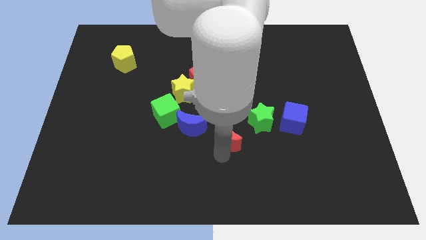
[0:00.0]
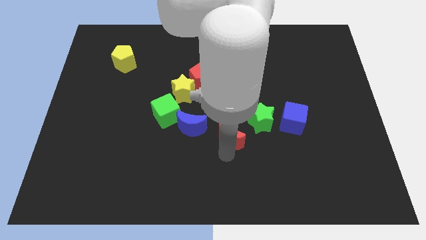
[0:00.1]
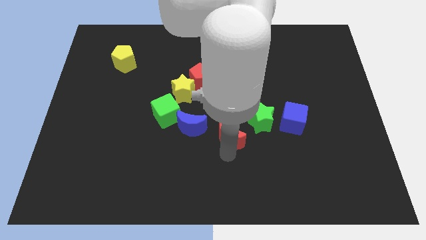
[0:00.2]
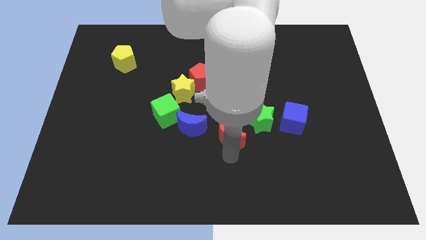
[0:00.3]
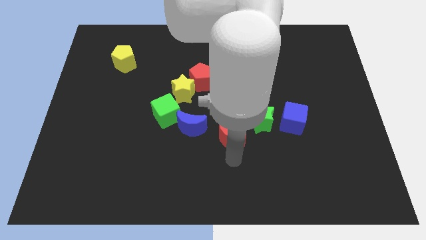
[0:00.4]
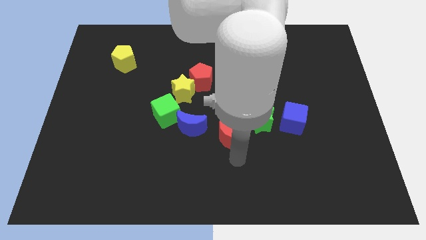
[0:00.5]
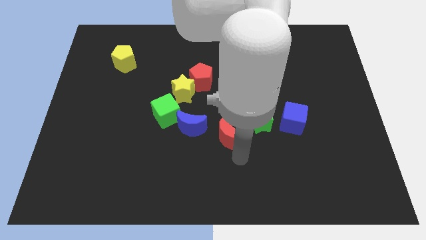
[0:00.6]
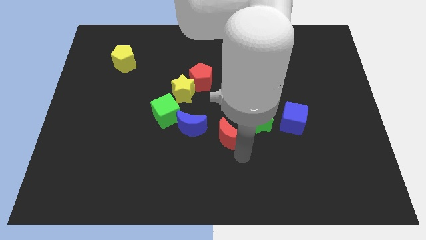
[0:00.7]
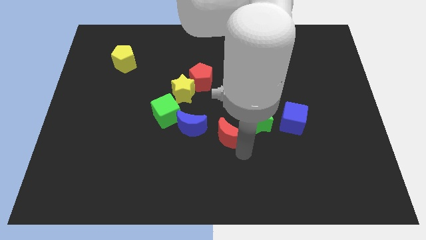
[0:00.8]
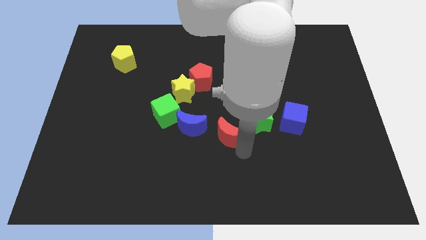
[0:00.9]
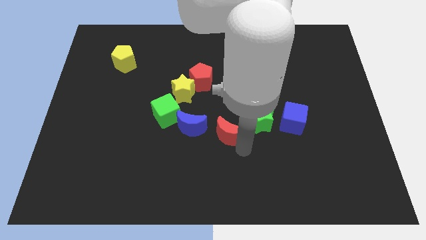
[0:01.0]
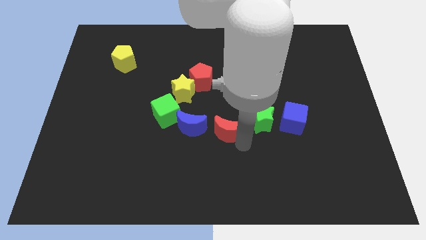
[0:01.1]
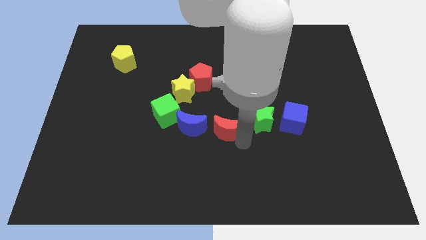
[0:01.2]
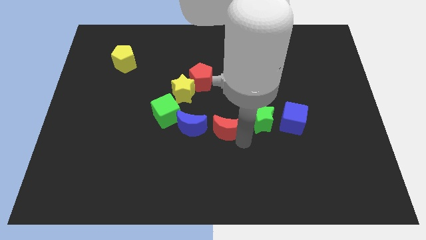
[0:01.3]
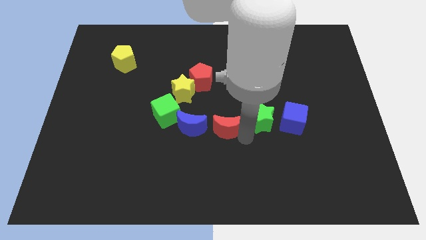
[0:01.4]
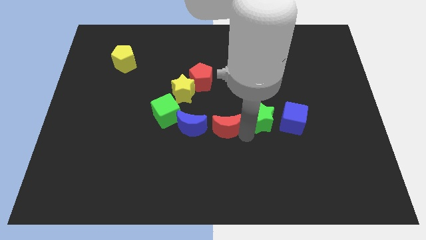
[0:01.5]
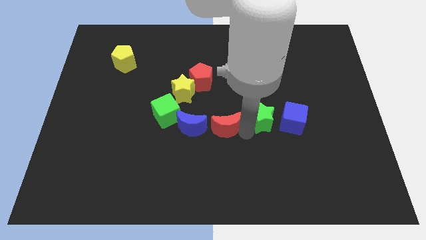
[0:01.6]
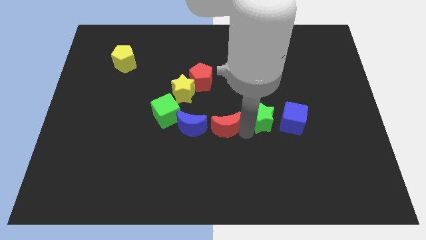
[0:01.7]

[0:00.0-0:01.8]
place red crescent beside blue crescent

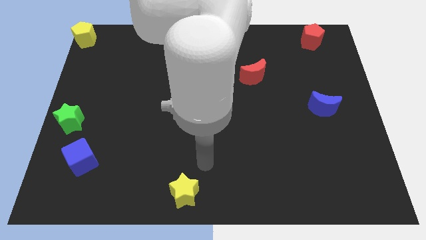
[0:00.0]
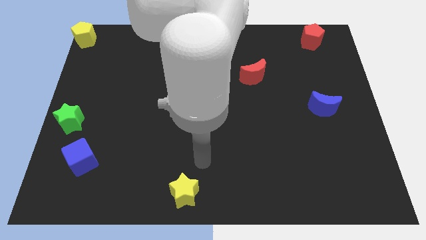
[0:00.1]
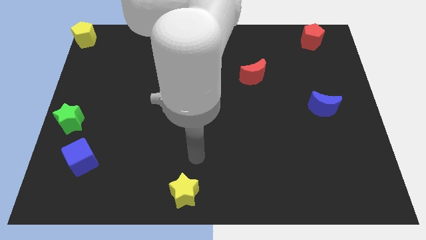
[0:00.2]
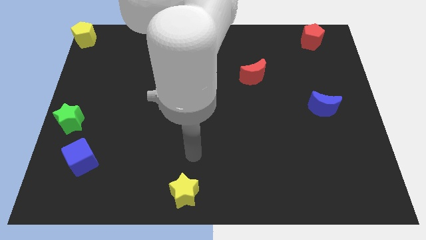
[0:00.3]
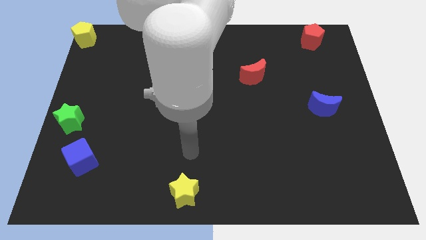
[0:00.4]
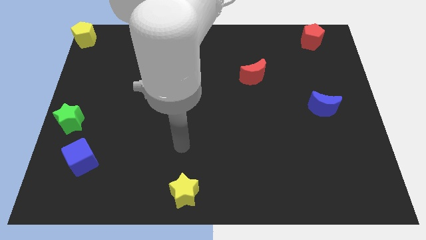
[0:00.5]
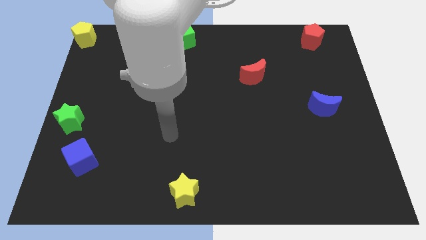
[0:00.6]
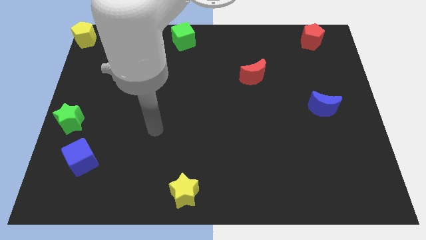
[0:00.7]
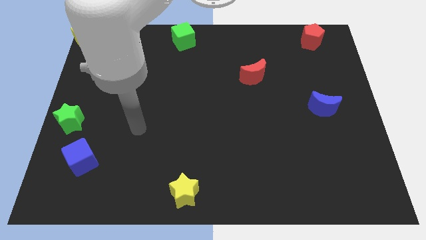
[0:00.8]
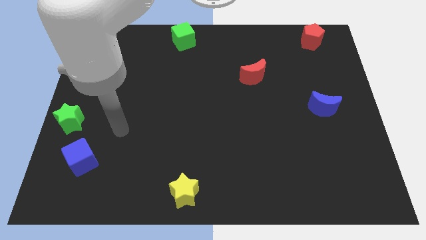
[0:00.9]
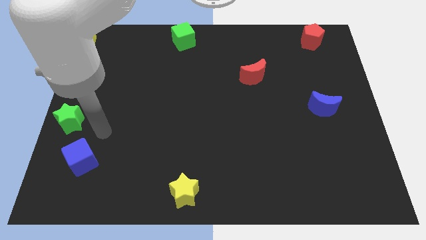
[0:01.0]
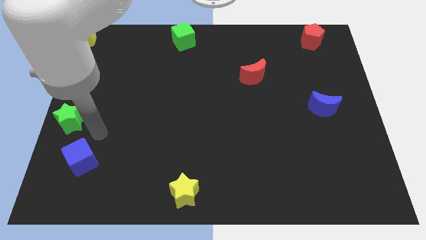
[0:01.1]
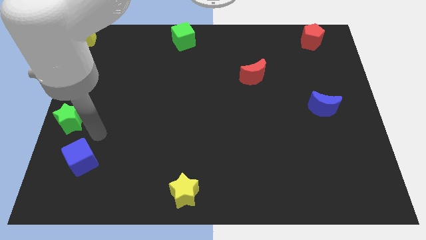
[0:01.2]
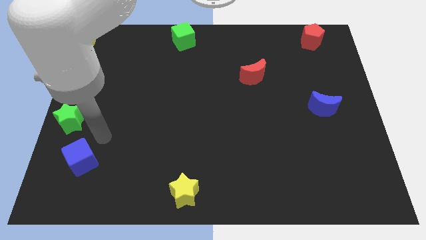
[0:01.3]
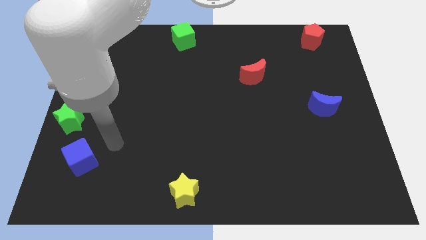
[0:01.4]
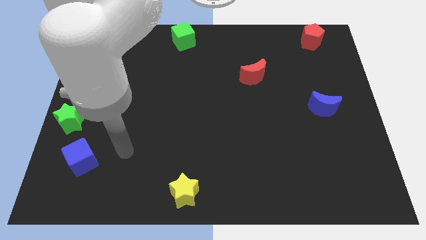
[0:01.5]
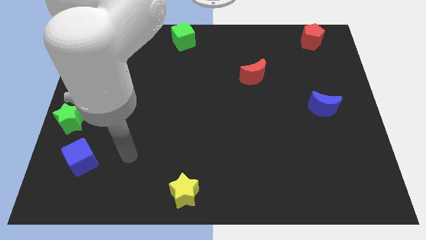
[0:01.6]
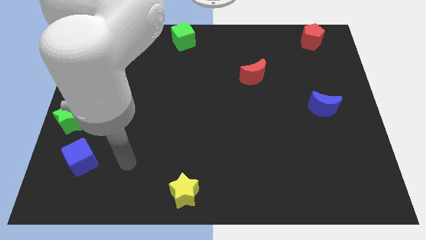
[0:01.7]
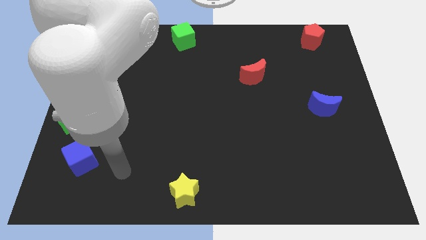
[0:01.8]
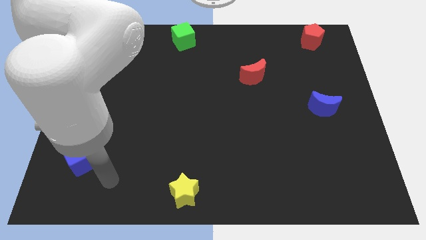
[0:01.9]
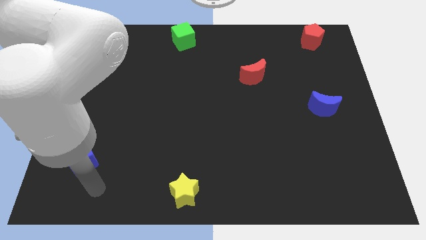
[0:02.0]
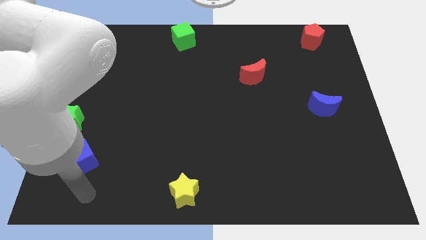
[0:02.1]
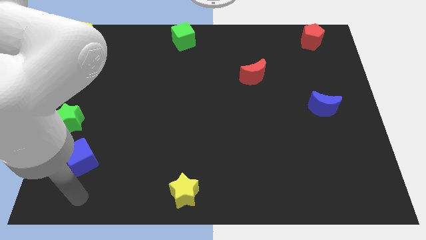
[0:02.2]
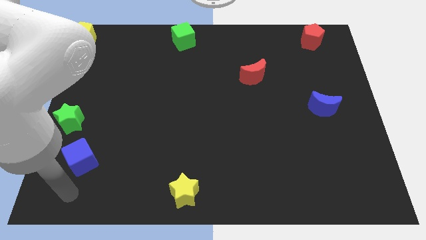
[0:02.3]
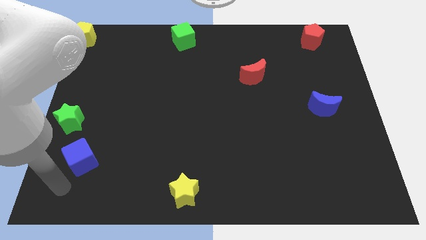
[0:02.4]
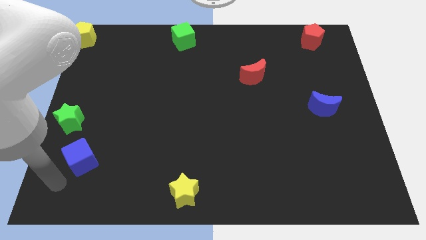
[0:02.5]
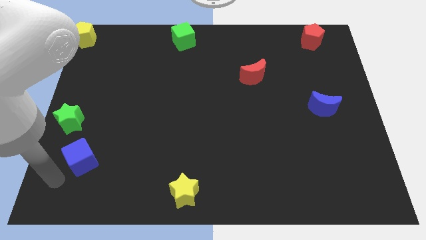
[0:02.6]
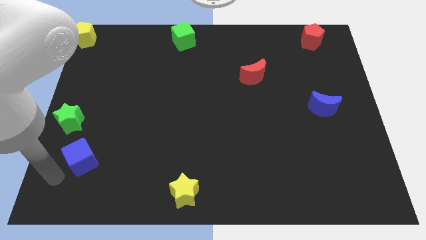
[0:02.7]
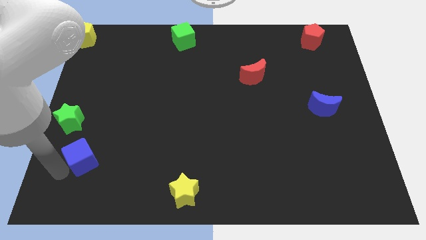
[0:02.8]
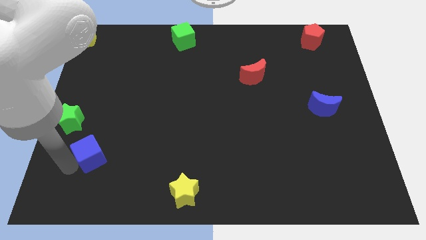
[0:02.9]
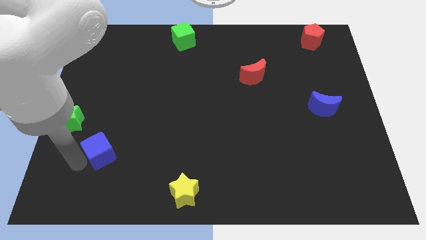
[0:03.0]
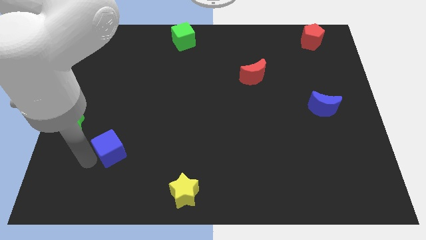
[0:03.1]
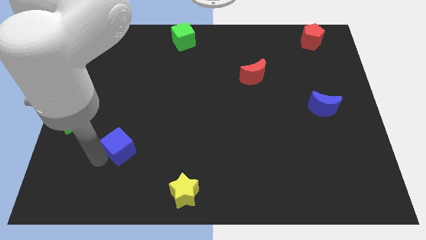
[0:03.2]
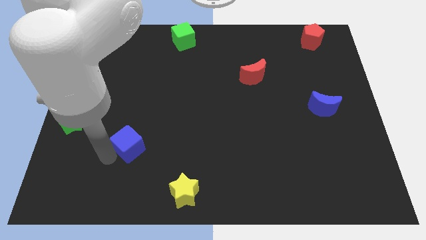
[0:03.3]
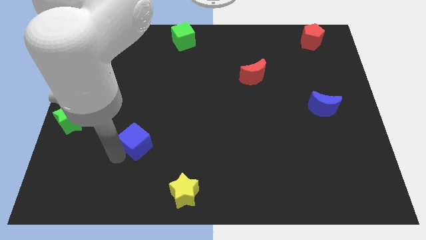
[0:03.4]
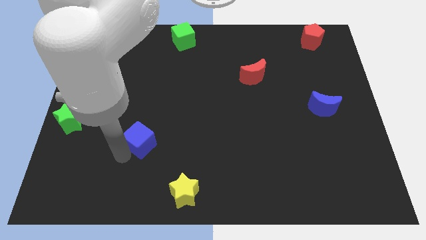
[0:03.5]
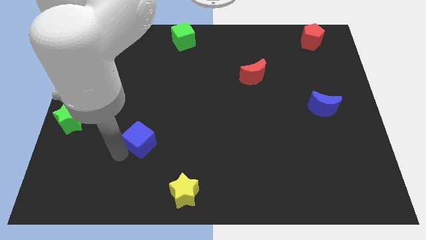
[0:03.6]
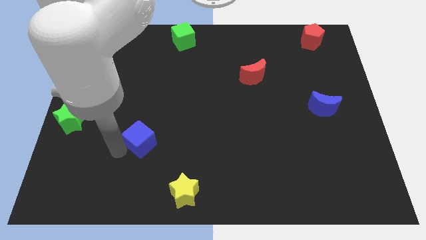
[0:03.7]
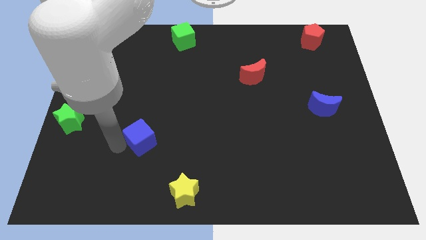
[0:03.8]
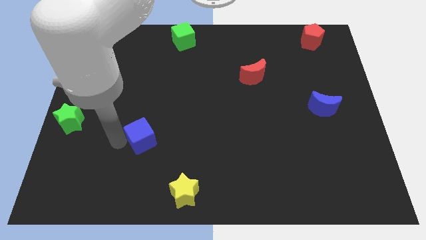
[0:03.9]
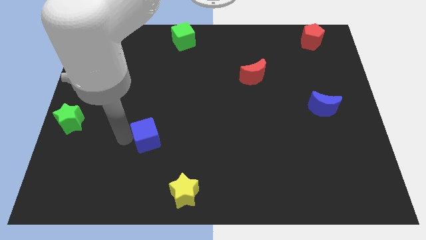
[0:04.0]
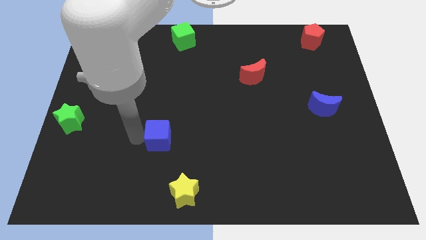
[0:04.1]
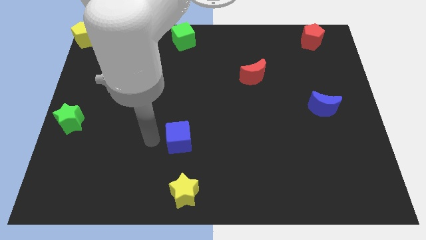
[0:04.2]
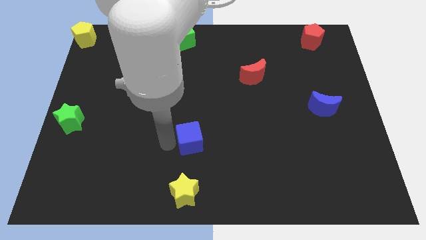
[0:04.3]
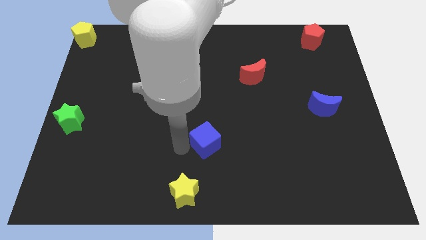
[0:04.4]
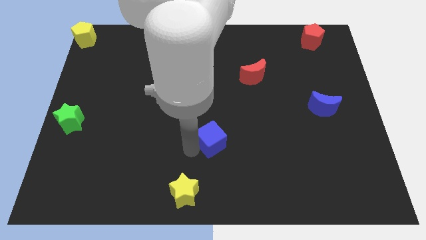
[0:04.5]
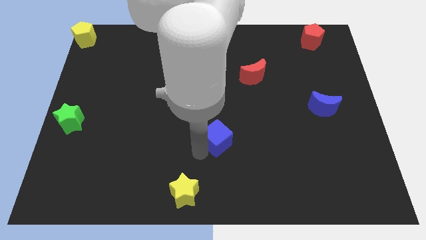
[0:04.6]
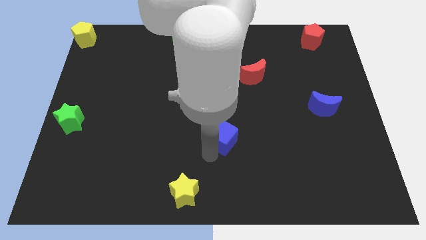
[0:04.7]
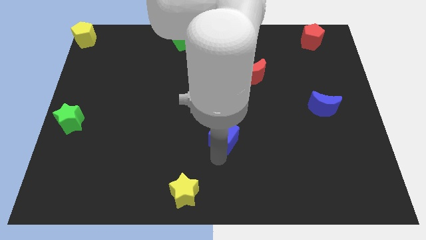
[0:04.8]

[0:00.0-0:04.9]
push the blue cube towards the center of the board

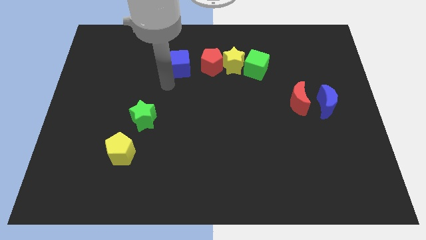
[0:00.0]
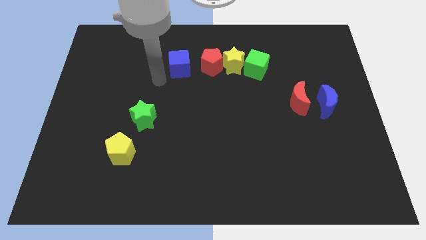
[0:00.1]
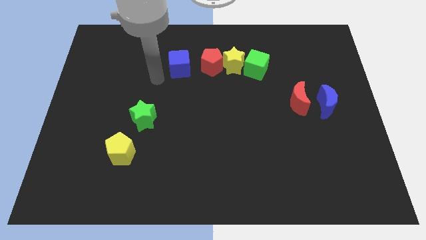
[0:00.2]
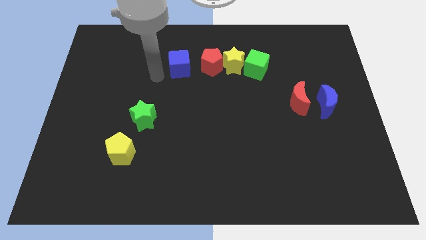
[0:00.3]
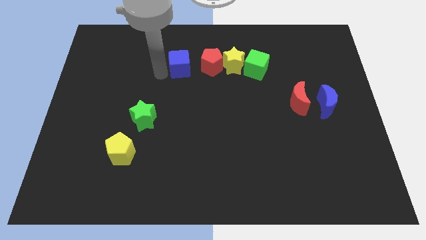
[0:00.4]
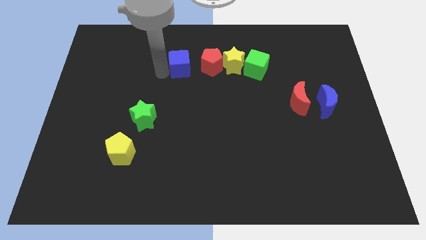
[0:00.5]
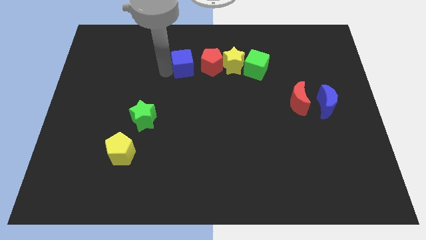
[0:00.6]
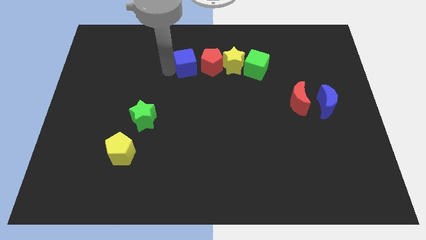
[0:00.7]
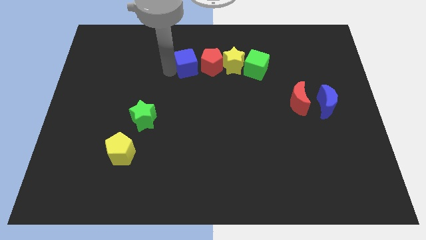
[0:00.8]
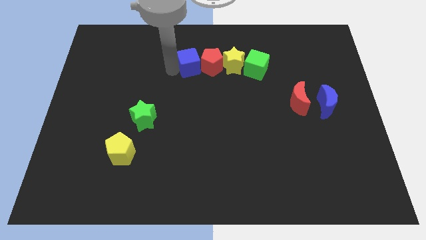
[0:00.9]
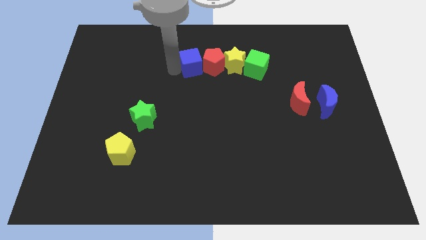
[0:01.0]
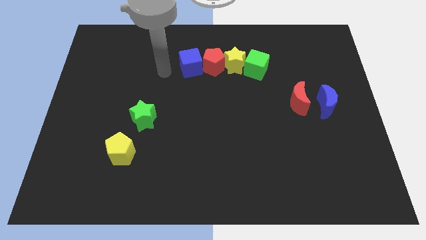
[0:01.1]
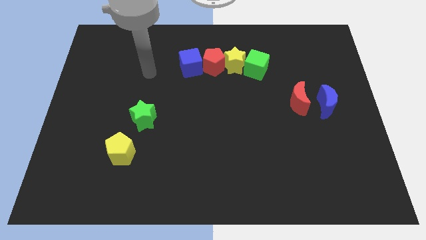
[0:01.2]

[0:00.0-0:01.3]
push blue cube to the left of the red pentagon

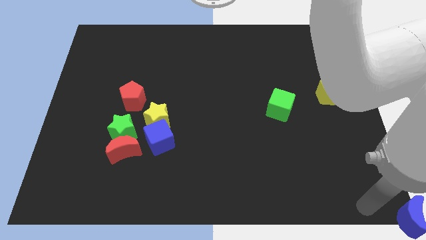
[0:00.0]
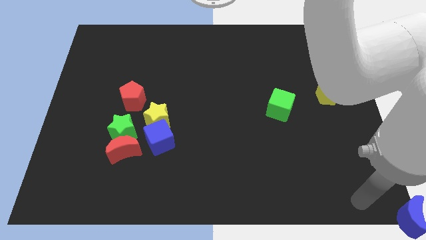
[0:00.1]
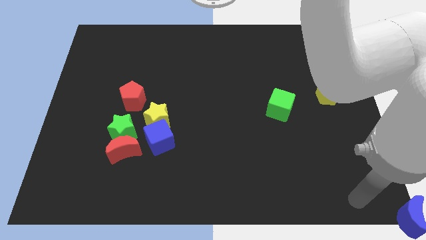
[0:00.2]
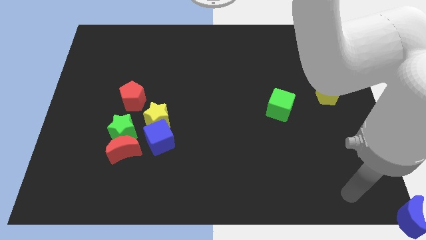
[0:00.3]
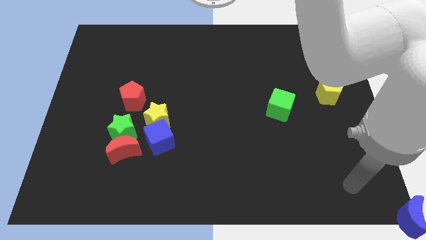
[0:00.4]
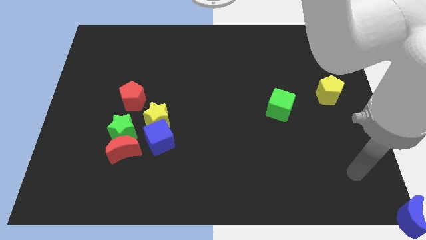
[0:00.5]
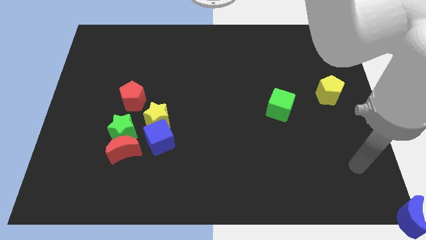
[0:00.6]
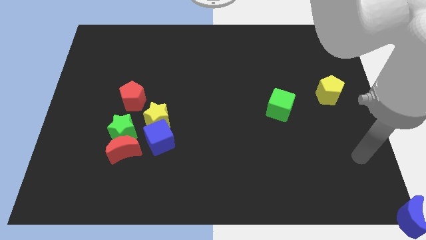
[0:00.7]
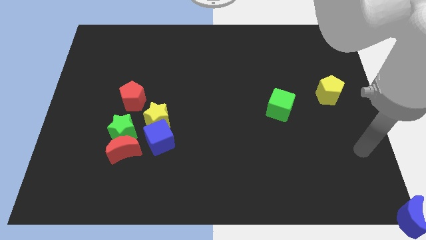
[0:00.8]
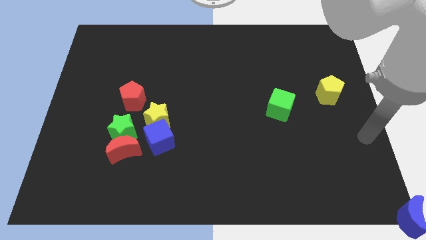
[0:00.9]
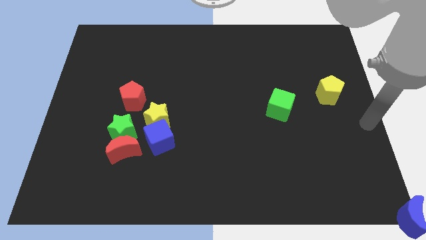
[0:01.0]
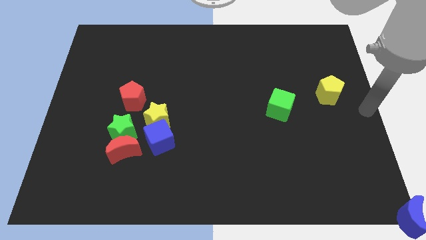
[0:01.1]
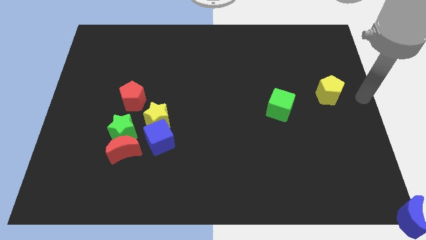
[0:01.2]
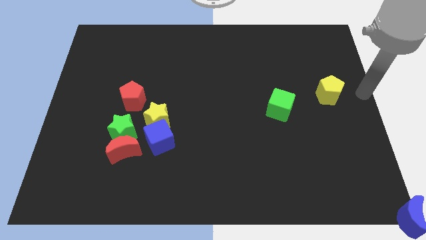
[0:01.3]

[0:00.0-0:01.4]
move your arm to the right of the yellow pentagon
